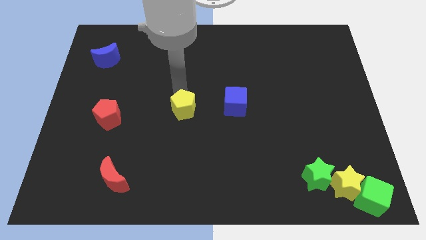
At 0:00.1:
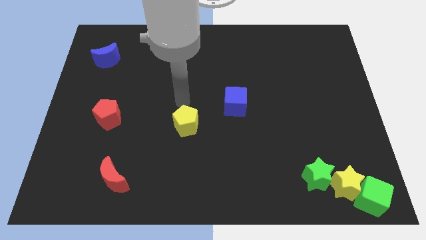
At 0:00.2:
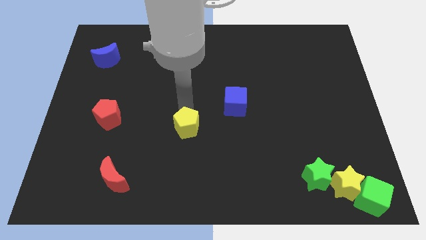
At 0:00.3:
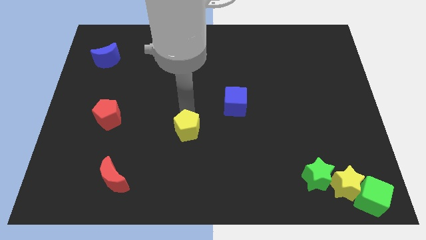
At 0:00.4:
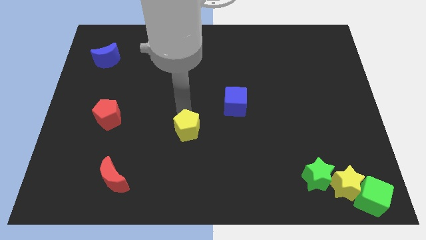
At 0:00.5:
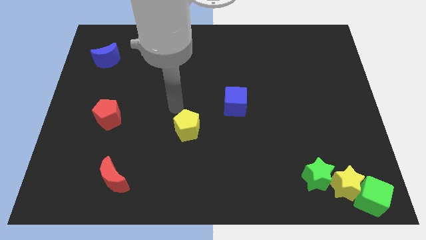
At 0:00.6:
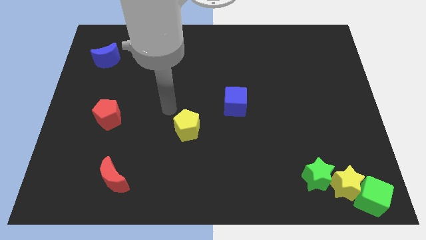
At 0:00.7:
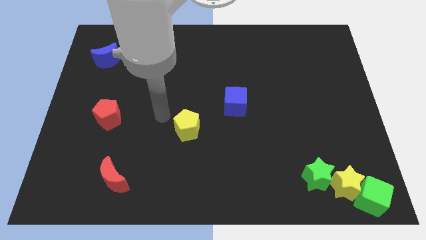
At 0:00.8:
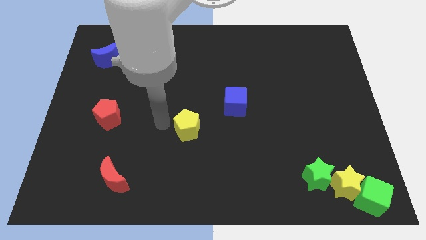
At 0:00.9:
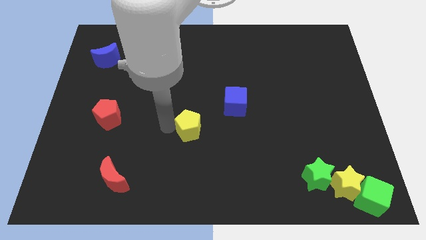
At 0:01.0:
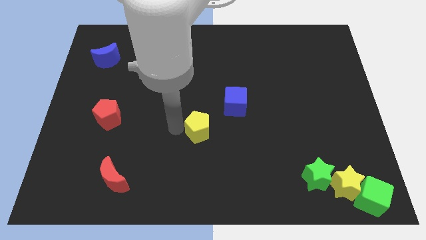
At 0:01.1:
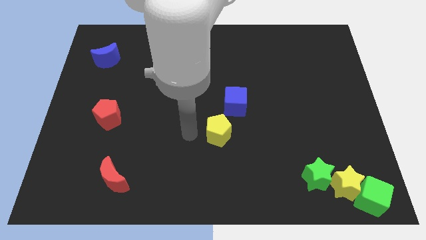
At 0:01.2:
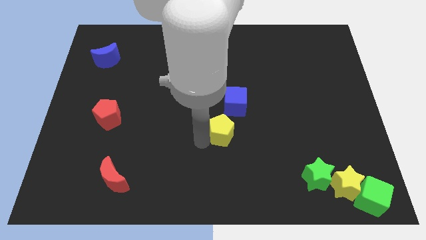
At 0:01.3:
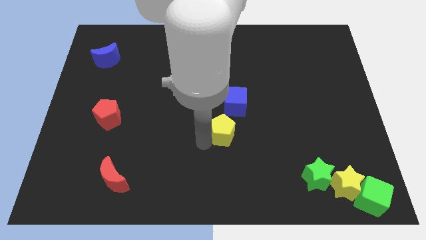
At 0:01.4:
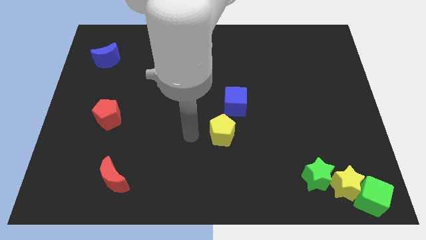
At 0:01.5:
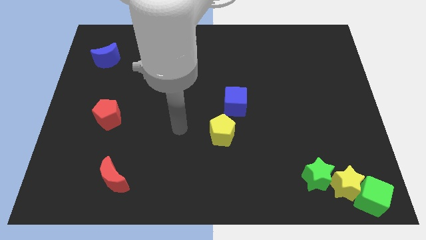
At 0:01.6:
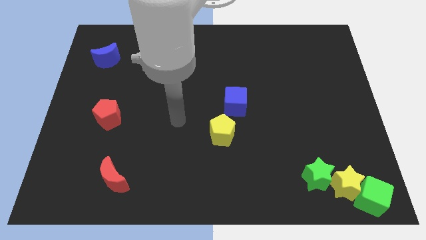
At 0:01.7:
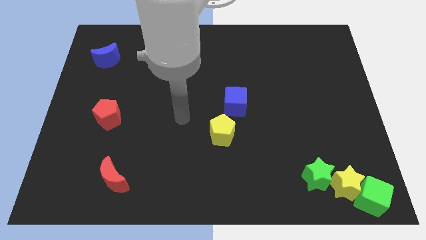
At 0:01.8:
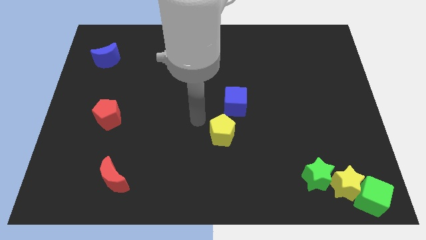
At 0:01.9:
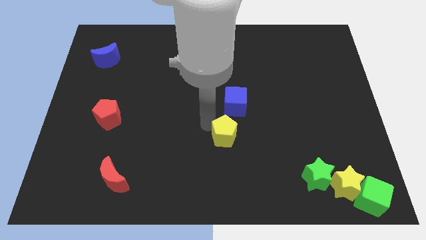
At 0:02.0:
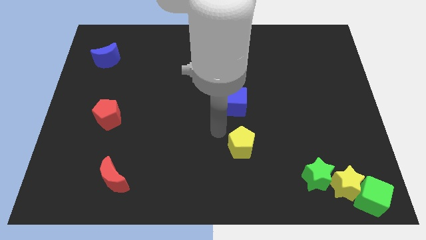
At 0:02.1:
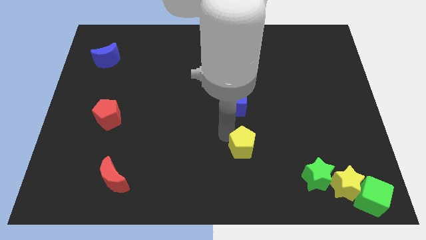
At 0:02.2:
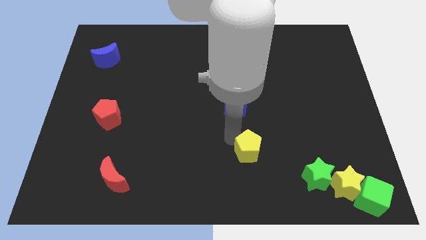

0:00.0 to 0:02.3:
place the yellow pentagon below the blue cube

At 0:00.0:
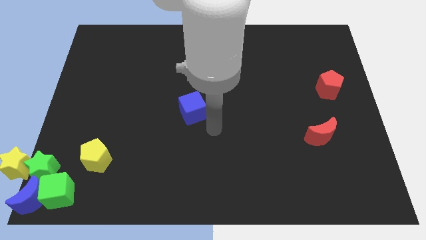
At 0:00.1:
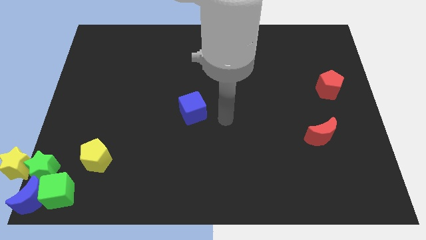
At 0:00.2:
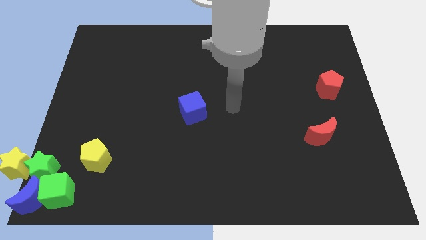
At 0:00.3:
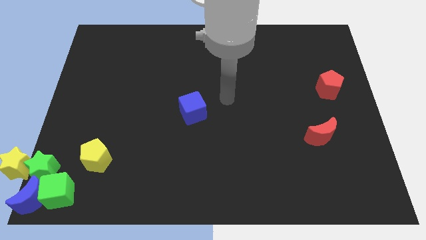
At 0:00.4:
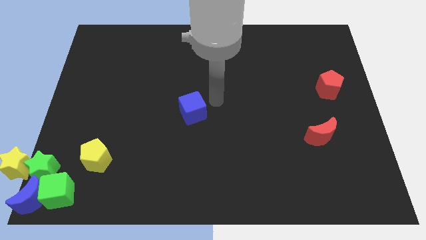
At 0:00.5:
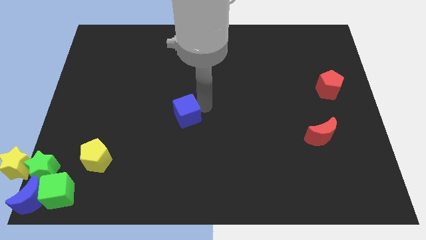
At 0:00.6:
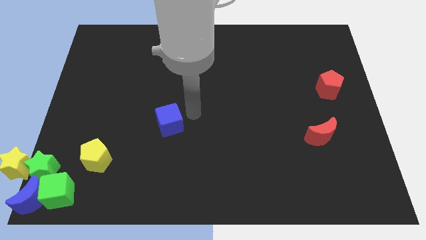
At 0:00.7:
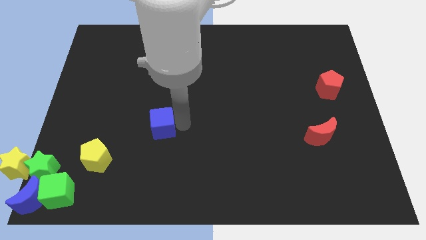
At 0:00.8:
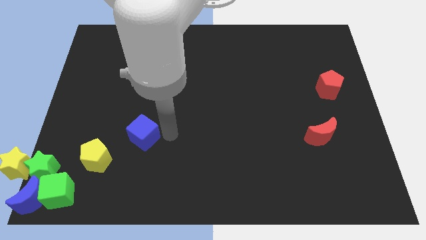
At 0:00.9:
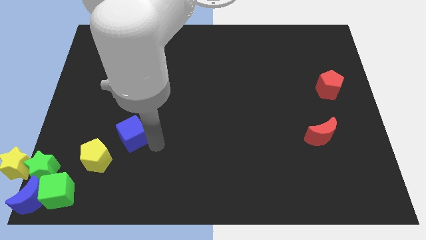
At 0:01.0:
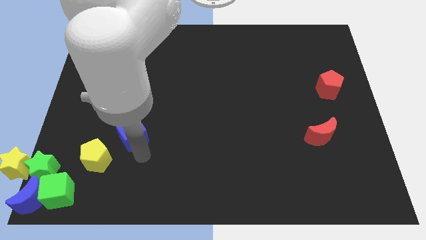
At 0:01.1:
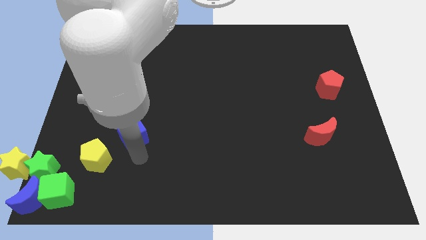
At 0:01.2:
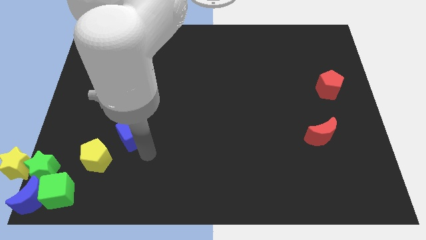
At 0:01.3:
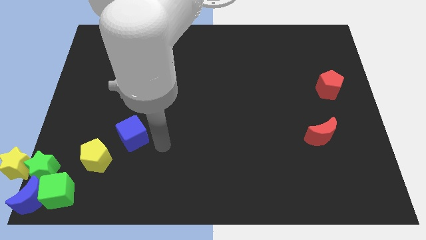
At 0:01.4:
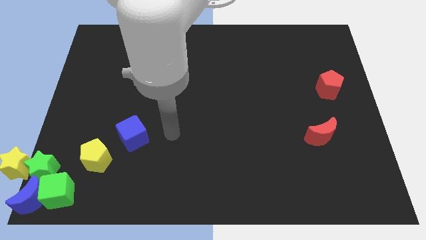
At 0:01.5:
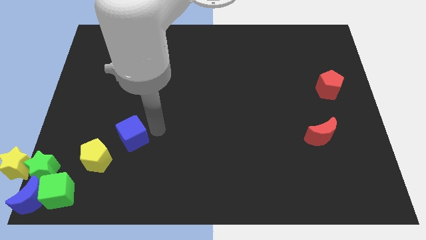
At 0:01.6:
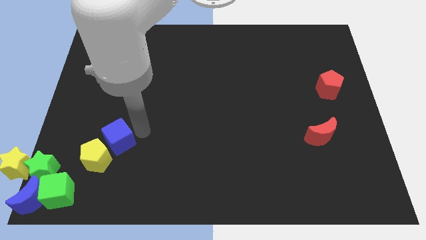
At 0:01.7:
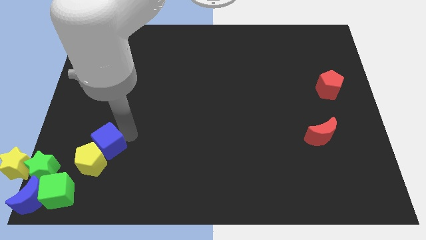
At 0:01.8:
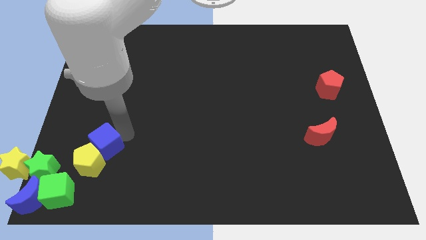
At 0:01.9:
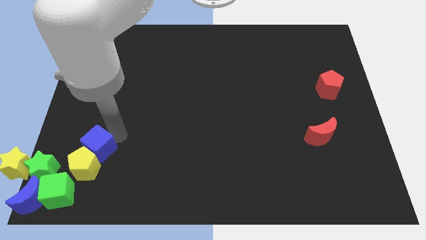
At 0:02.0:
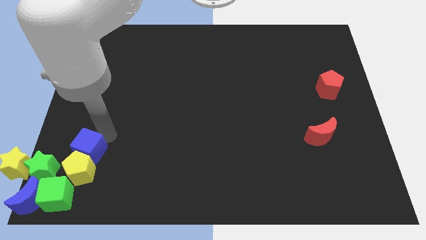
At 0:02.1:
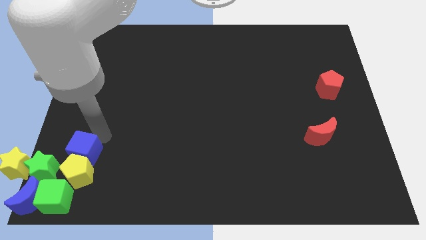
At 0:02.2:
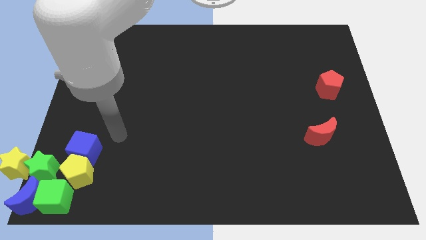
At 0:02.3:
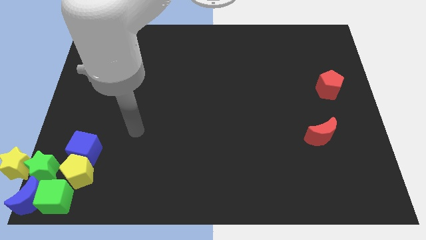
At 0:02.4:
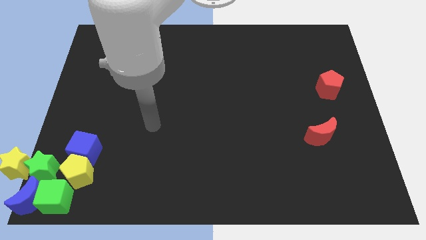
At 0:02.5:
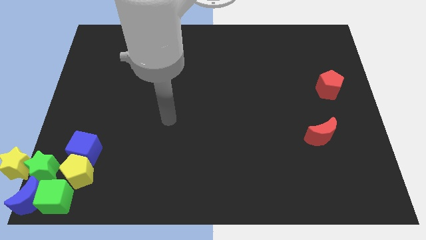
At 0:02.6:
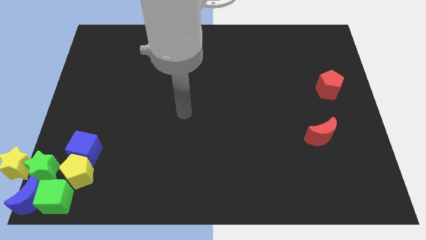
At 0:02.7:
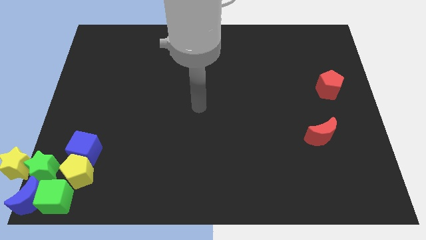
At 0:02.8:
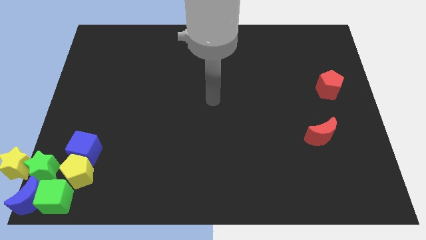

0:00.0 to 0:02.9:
add the yellow pentagon and blue cube to the group of blocks at the bottom left corner of the board

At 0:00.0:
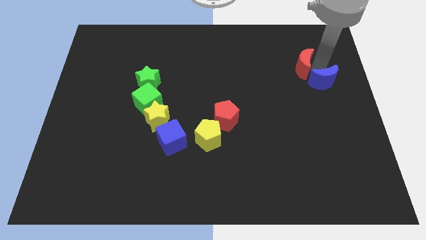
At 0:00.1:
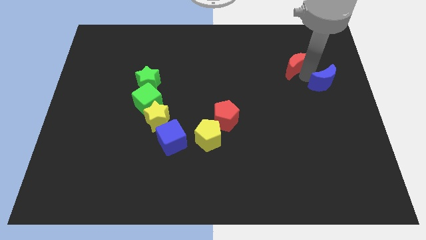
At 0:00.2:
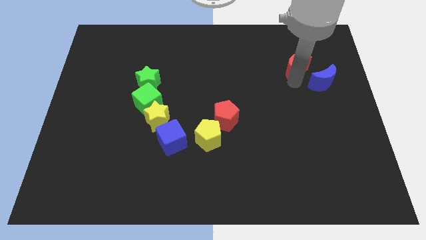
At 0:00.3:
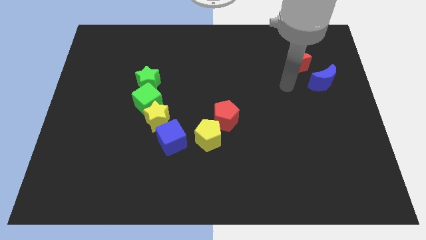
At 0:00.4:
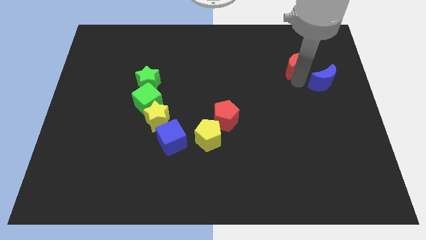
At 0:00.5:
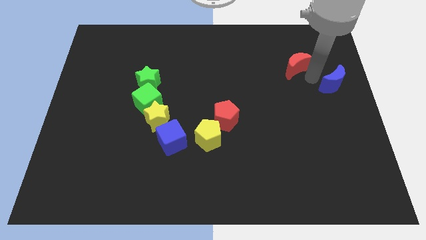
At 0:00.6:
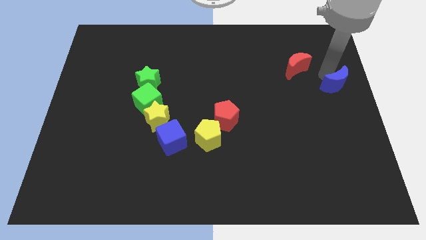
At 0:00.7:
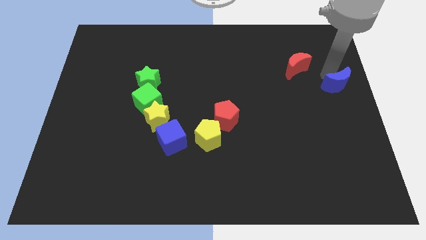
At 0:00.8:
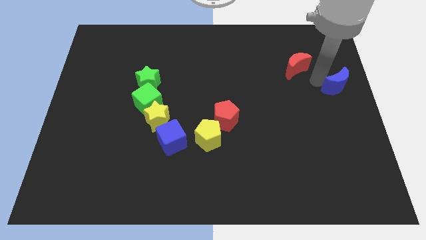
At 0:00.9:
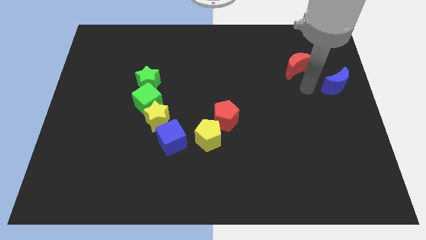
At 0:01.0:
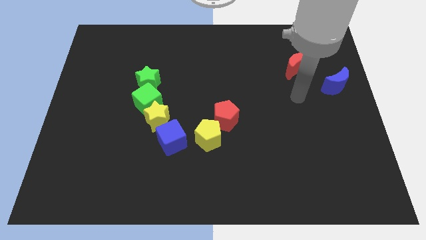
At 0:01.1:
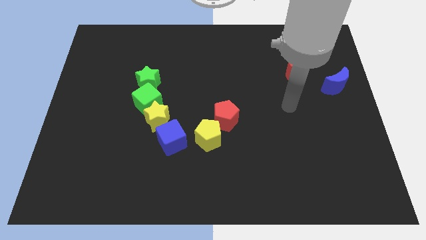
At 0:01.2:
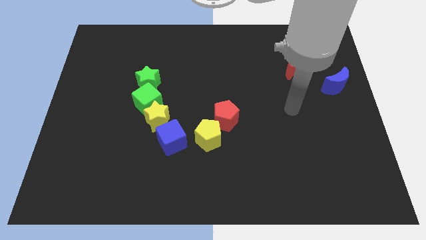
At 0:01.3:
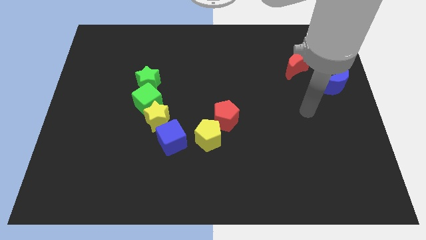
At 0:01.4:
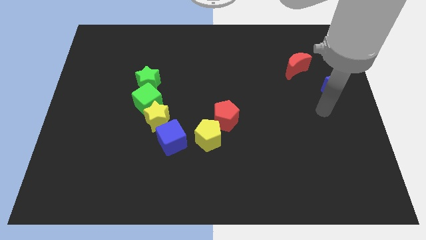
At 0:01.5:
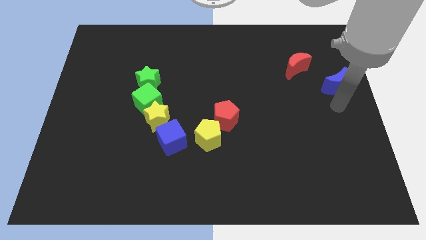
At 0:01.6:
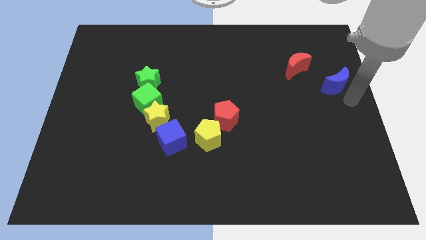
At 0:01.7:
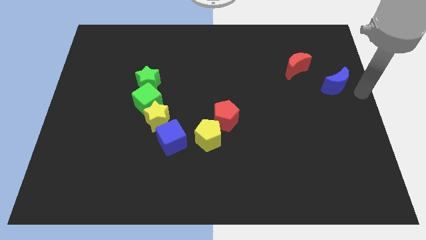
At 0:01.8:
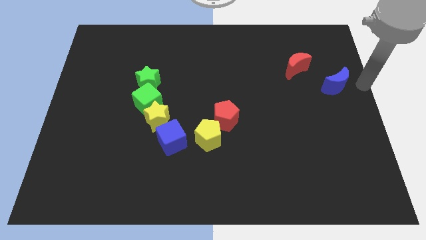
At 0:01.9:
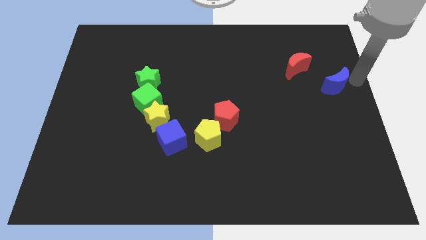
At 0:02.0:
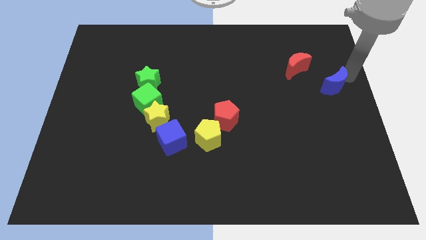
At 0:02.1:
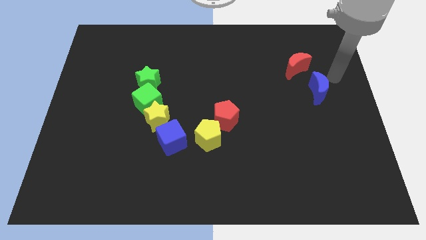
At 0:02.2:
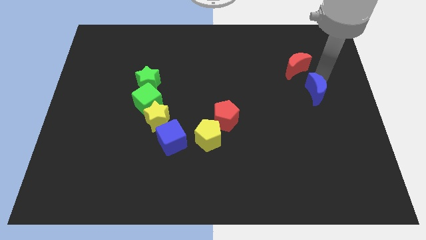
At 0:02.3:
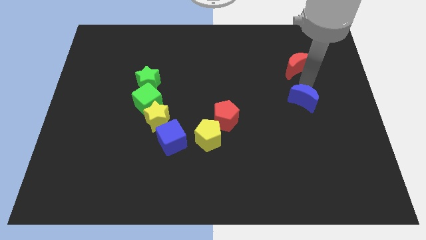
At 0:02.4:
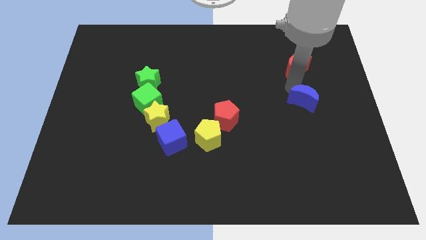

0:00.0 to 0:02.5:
slide the blue moon to the left of the board

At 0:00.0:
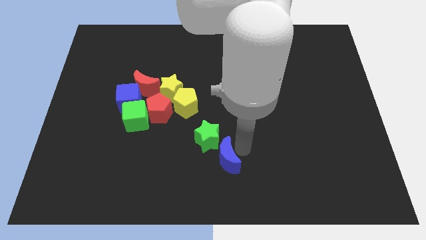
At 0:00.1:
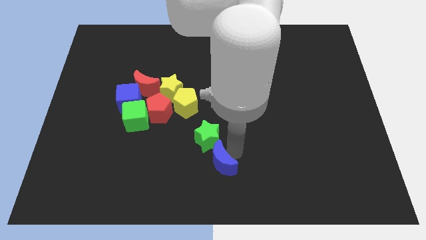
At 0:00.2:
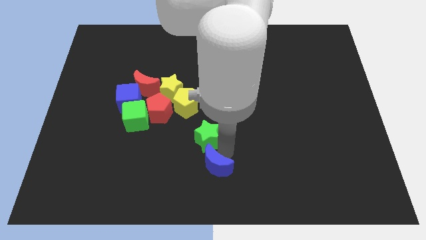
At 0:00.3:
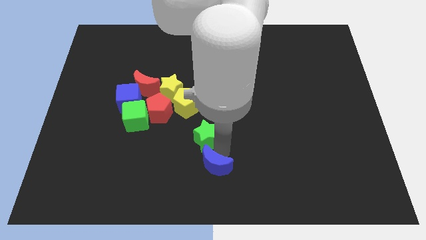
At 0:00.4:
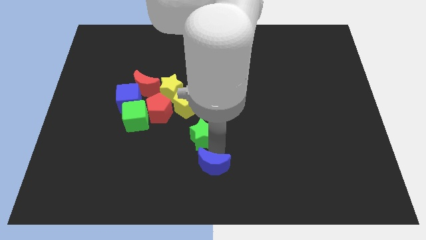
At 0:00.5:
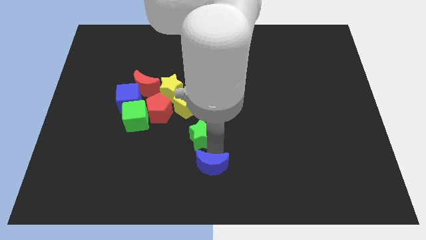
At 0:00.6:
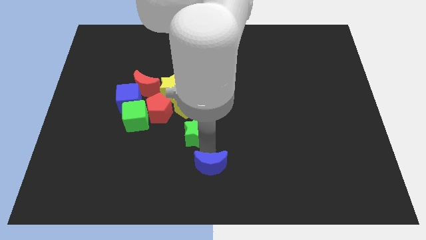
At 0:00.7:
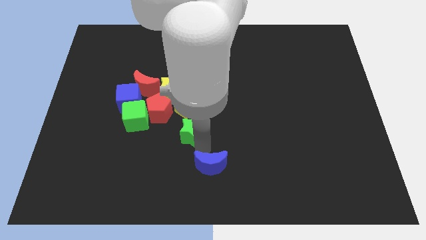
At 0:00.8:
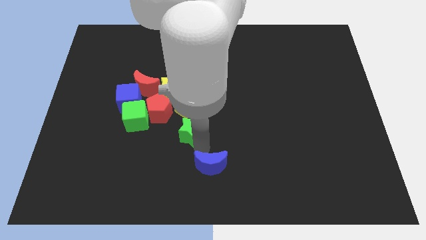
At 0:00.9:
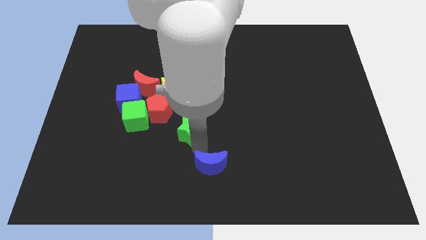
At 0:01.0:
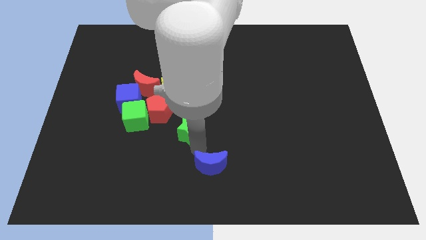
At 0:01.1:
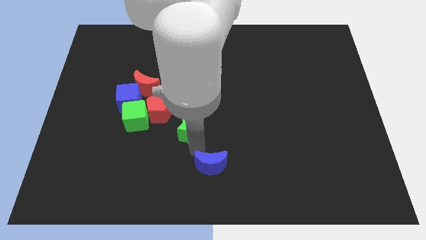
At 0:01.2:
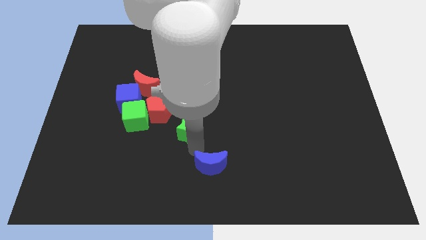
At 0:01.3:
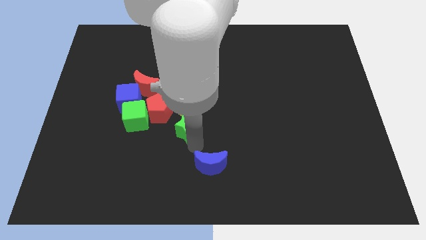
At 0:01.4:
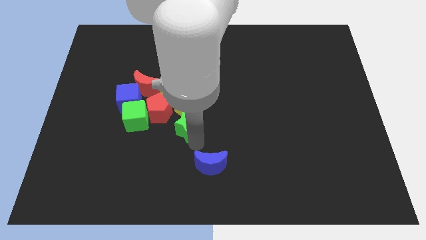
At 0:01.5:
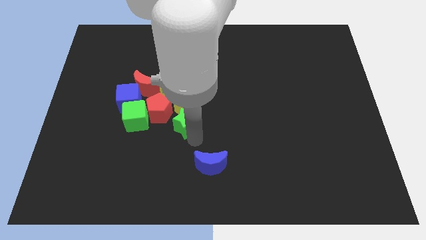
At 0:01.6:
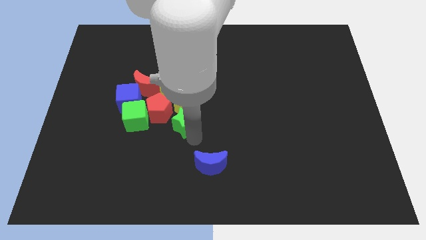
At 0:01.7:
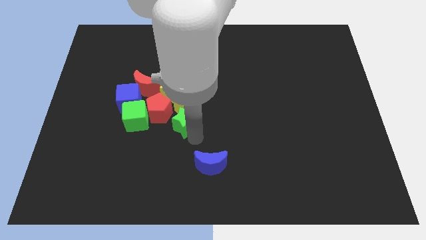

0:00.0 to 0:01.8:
move the green star into the bottom side of the yellow pentagon
